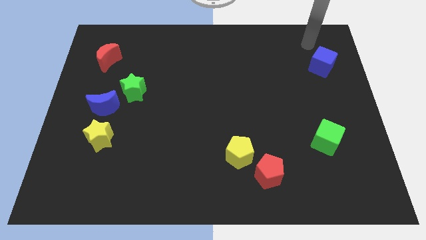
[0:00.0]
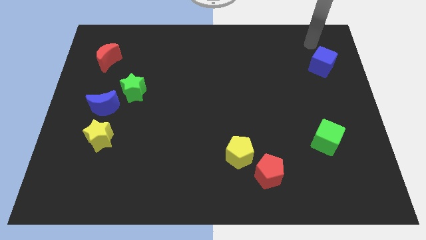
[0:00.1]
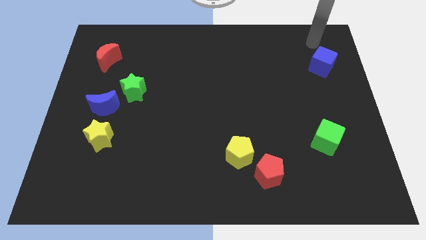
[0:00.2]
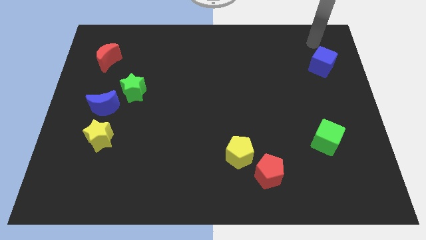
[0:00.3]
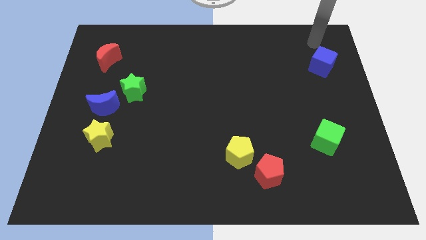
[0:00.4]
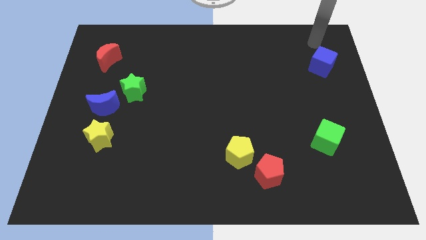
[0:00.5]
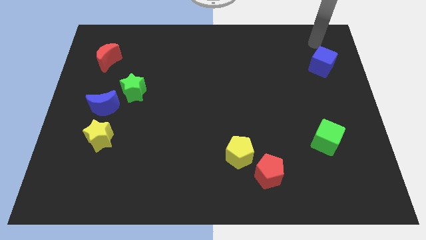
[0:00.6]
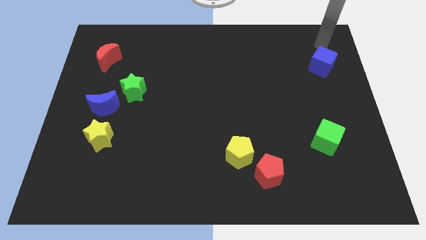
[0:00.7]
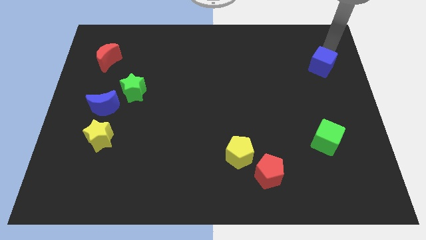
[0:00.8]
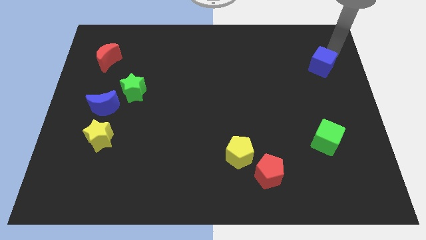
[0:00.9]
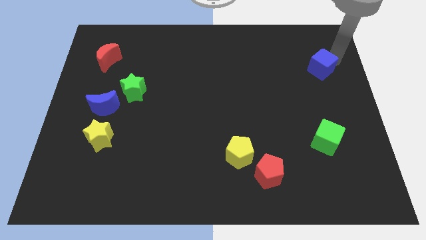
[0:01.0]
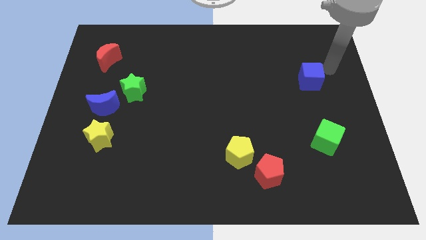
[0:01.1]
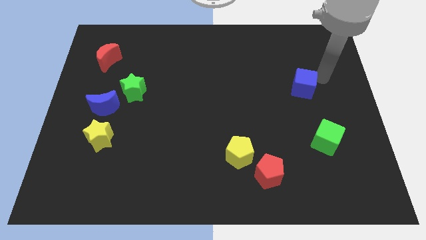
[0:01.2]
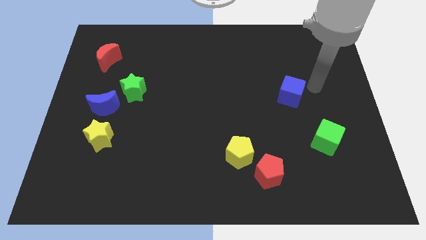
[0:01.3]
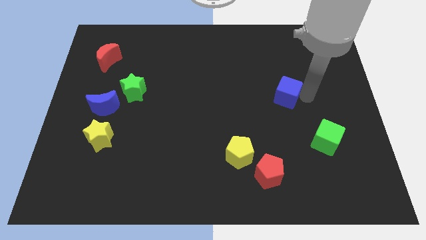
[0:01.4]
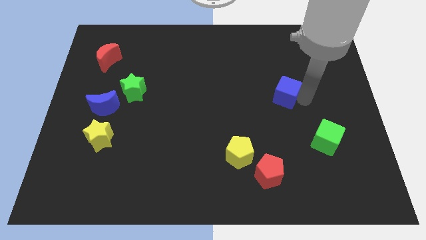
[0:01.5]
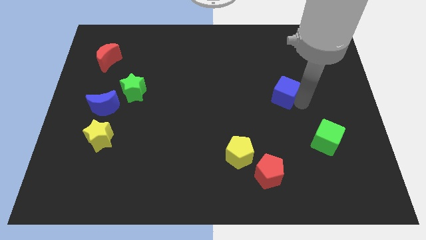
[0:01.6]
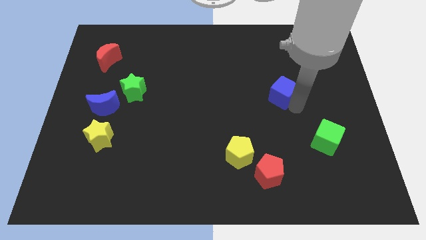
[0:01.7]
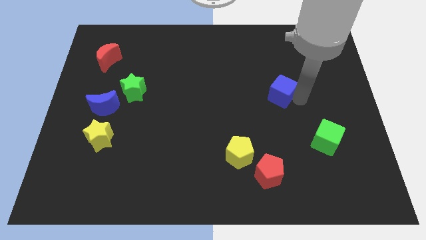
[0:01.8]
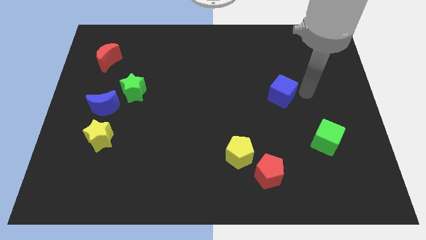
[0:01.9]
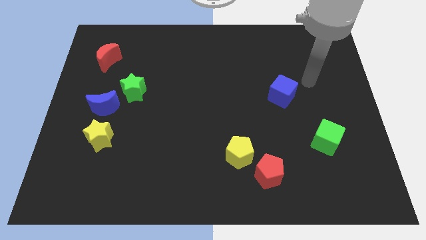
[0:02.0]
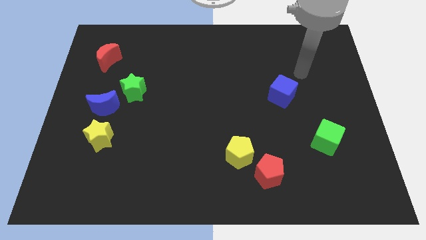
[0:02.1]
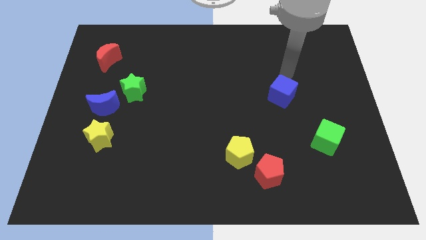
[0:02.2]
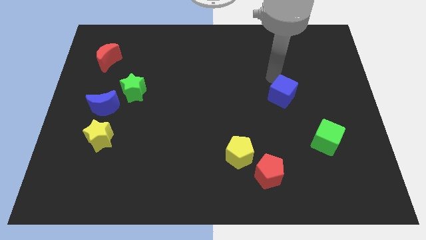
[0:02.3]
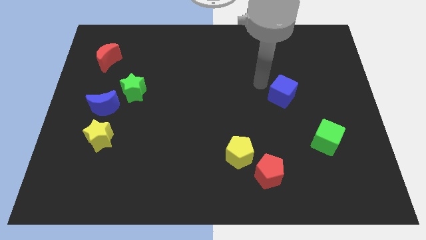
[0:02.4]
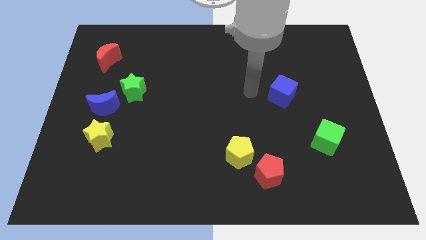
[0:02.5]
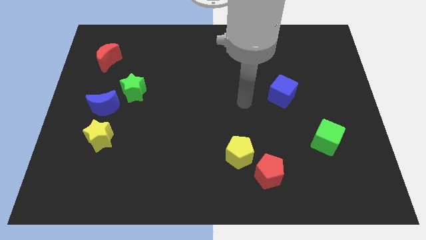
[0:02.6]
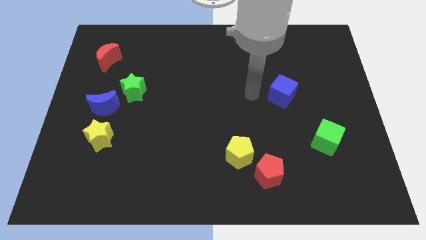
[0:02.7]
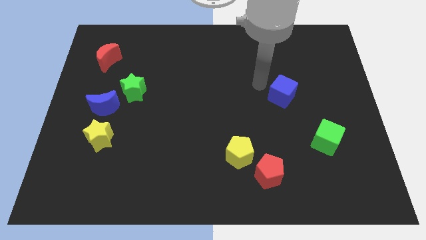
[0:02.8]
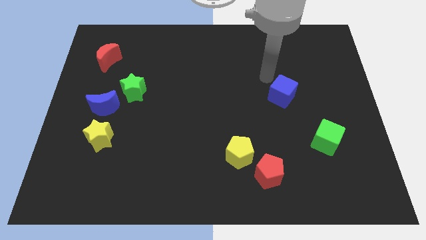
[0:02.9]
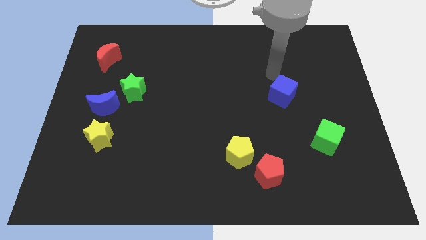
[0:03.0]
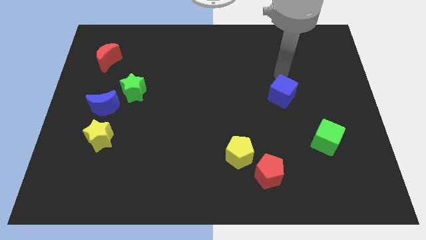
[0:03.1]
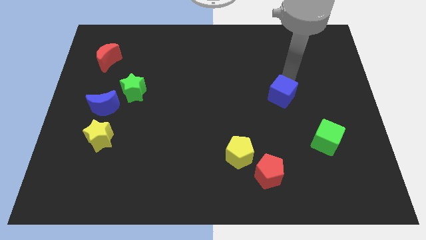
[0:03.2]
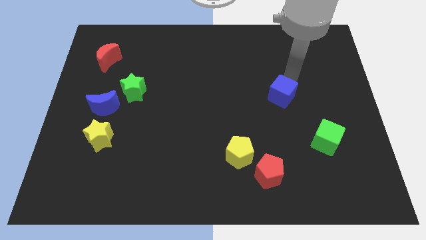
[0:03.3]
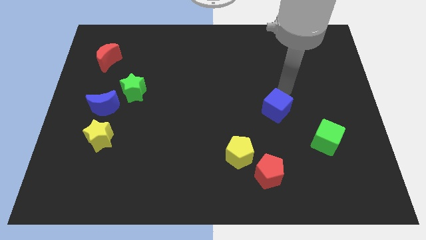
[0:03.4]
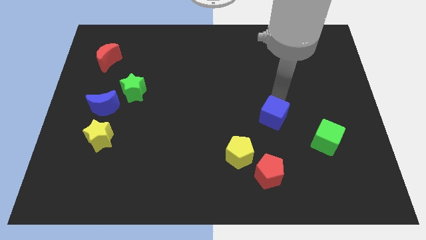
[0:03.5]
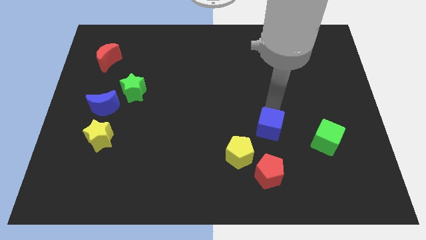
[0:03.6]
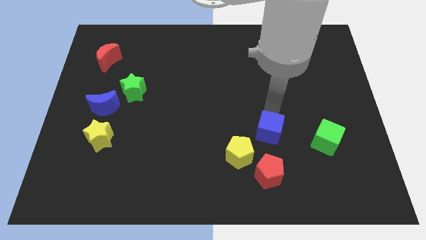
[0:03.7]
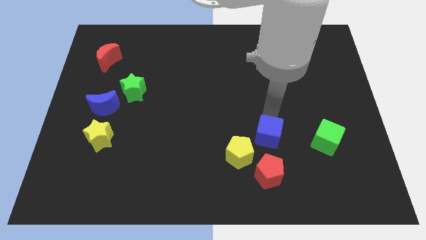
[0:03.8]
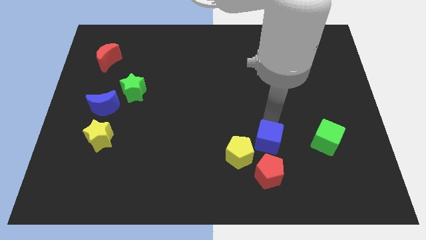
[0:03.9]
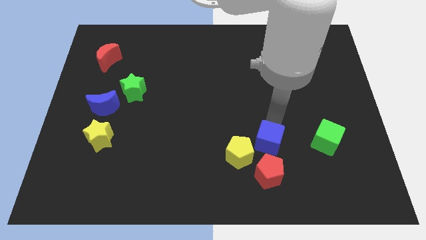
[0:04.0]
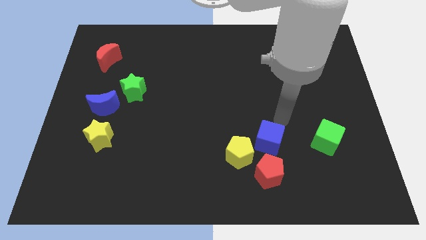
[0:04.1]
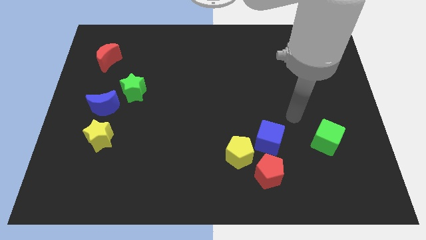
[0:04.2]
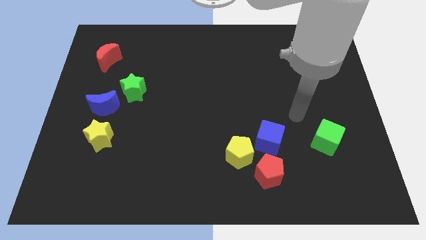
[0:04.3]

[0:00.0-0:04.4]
move the blue cube parallel right to the green cube

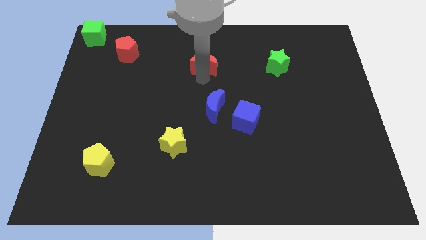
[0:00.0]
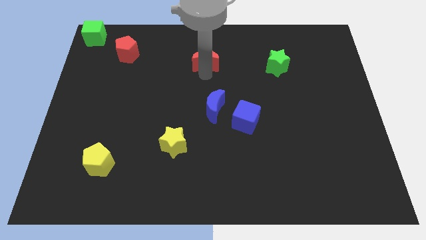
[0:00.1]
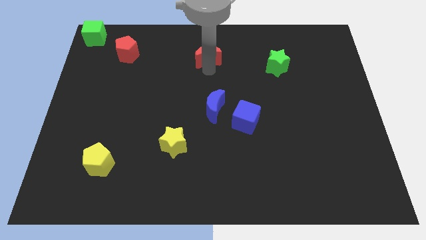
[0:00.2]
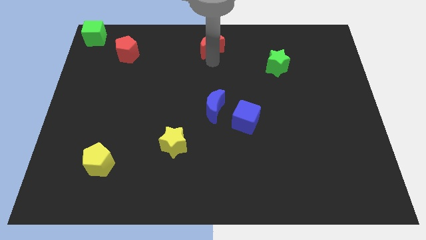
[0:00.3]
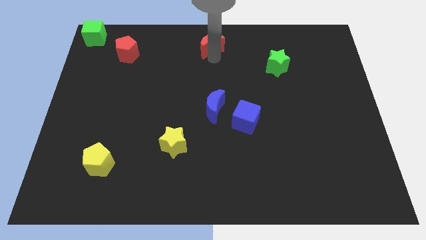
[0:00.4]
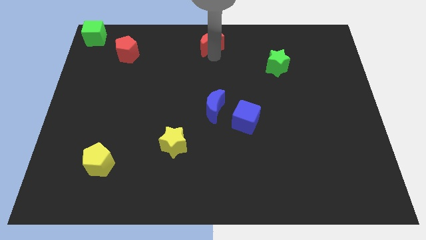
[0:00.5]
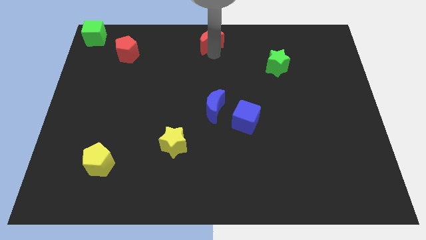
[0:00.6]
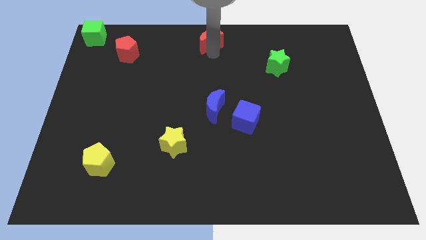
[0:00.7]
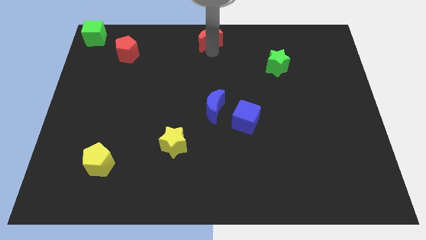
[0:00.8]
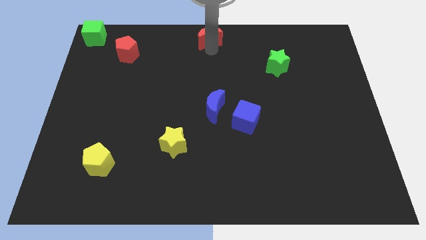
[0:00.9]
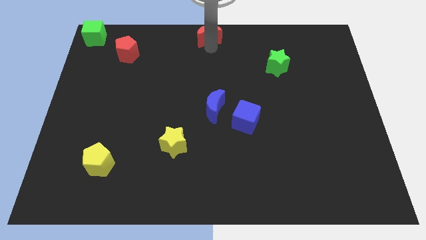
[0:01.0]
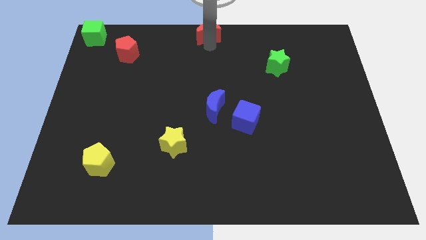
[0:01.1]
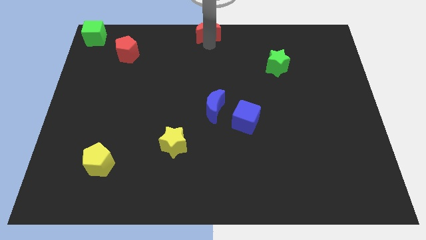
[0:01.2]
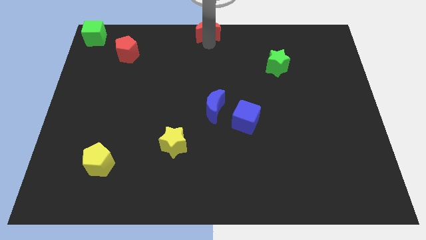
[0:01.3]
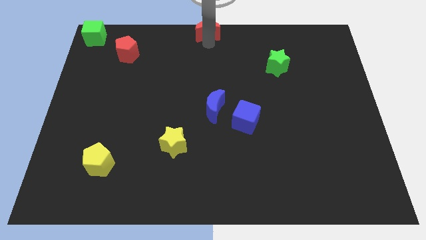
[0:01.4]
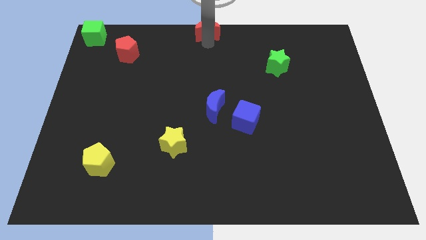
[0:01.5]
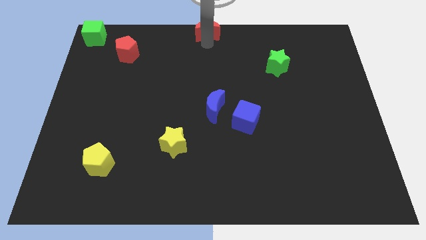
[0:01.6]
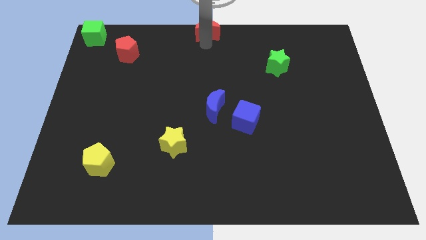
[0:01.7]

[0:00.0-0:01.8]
move the red crescent to the top center of the table

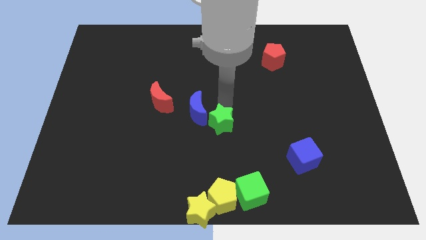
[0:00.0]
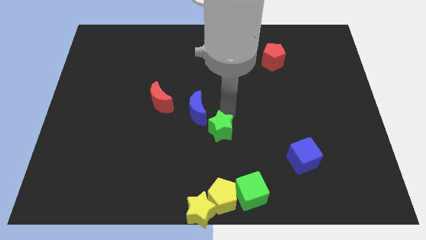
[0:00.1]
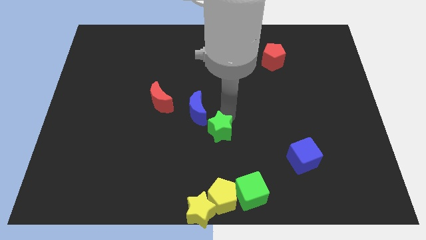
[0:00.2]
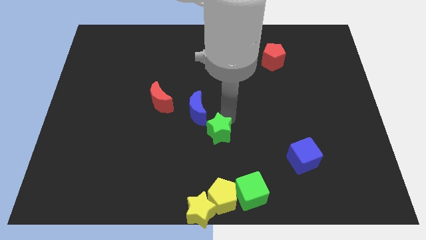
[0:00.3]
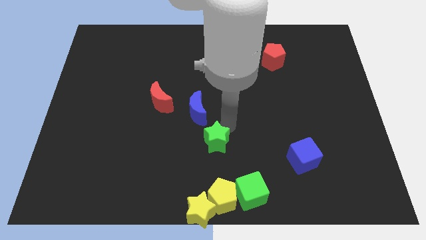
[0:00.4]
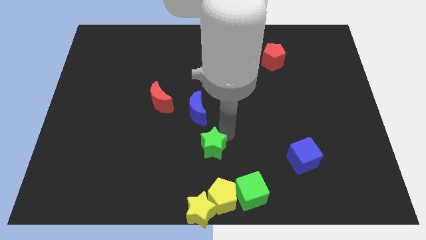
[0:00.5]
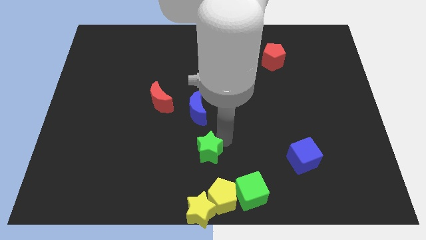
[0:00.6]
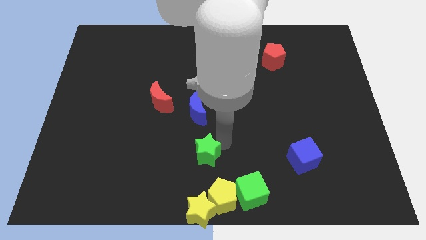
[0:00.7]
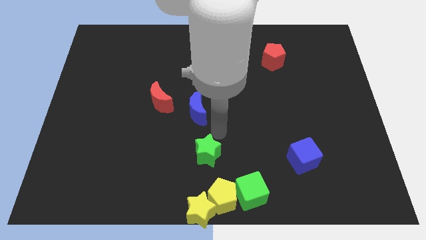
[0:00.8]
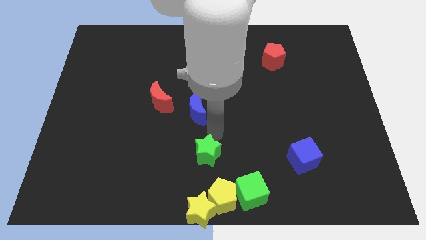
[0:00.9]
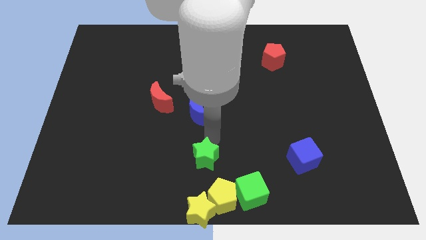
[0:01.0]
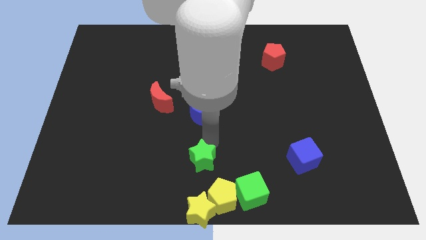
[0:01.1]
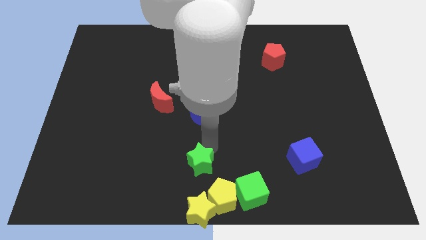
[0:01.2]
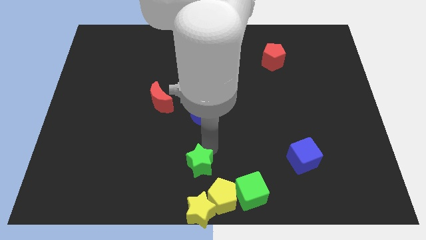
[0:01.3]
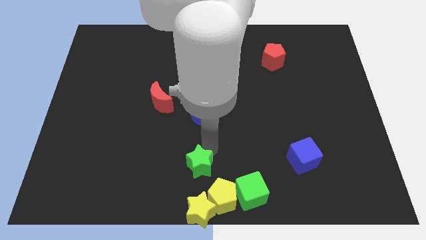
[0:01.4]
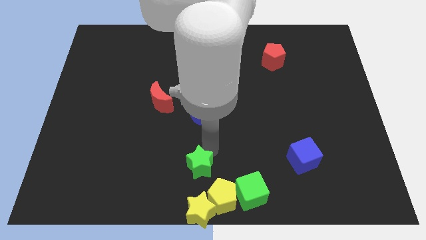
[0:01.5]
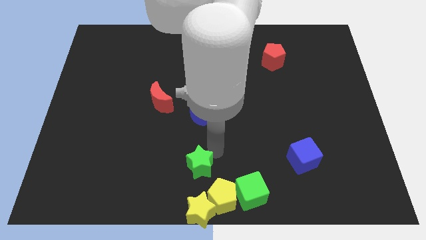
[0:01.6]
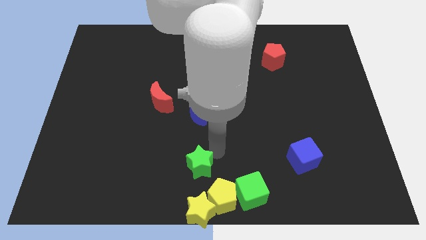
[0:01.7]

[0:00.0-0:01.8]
push the green star to the top of the yellow pentagon

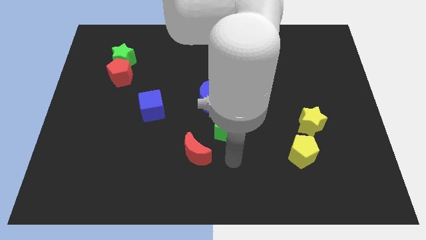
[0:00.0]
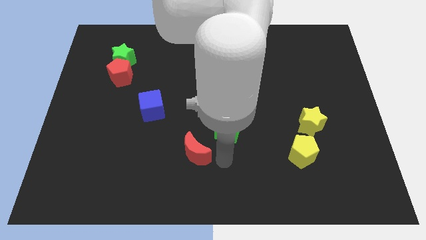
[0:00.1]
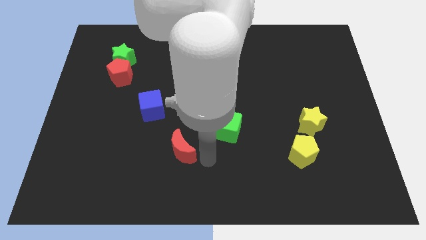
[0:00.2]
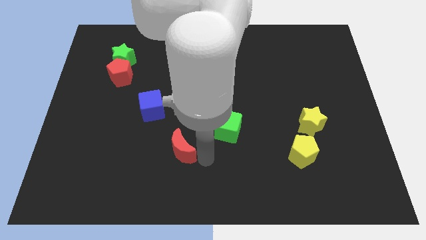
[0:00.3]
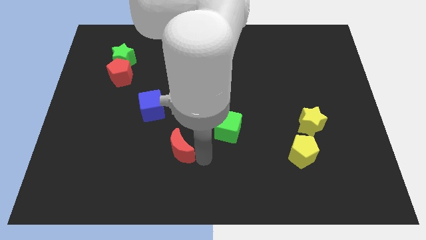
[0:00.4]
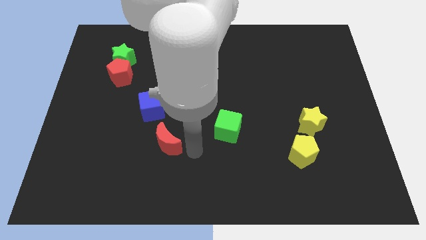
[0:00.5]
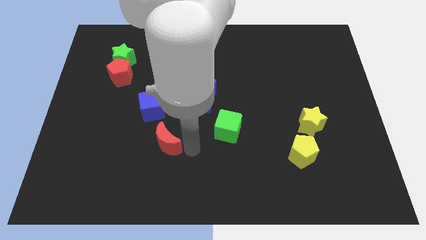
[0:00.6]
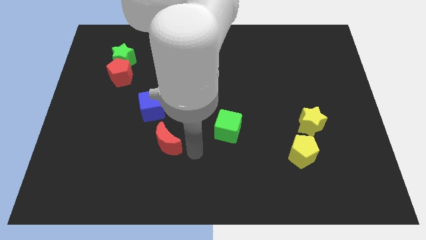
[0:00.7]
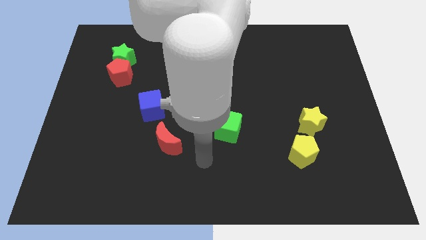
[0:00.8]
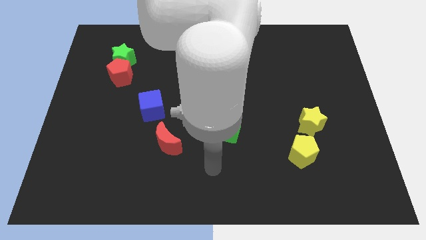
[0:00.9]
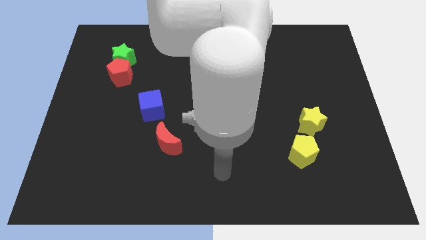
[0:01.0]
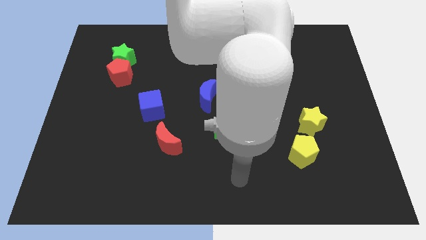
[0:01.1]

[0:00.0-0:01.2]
slide the red crescent to the bottom of the blue cube
